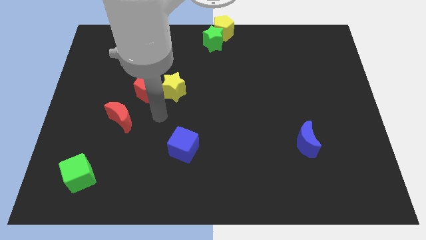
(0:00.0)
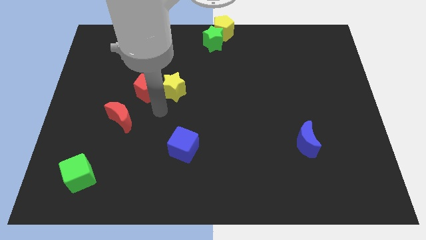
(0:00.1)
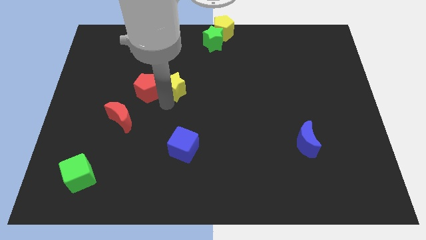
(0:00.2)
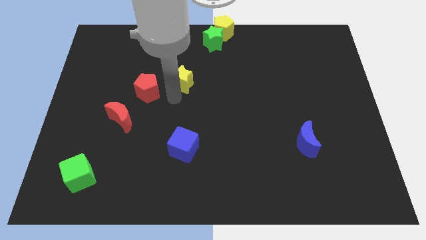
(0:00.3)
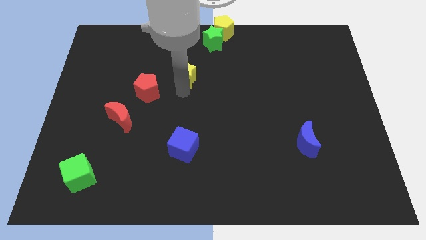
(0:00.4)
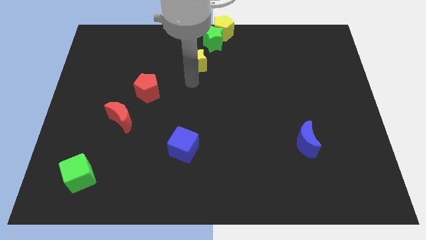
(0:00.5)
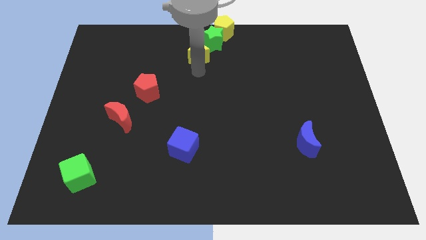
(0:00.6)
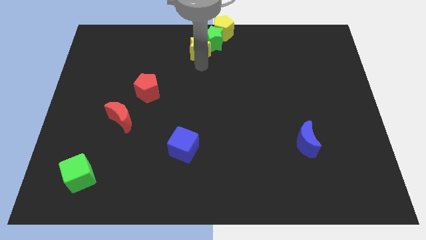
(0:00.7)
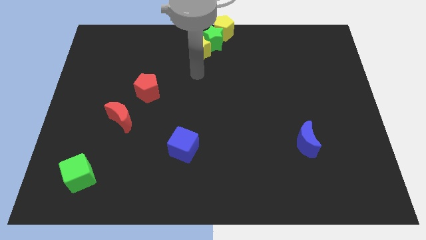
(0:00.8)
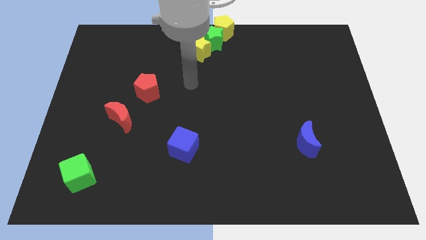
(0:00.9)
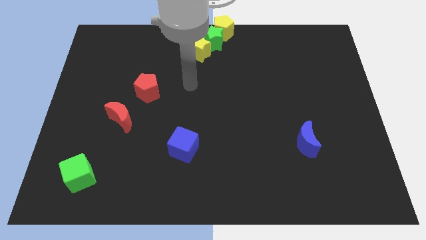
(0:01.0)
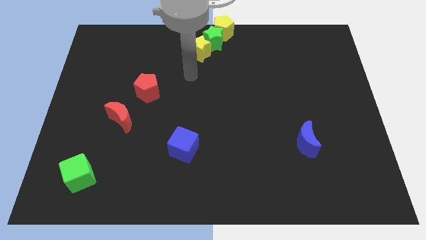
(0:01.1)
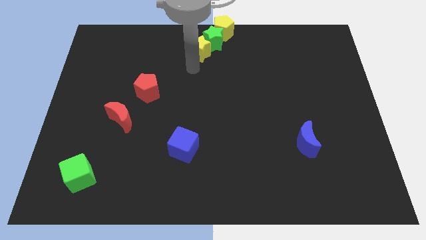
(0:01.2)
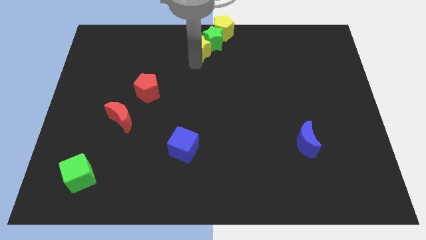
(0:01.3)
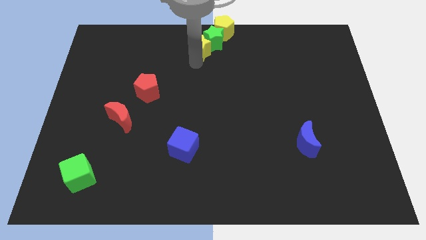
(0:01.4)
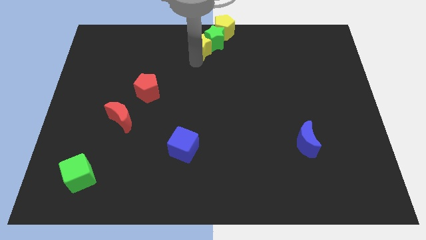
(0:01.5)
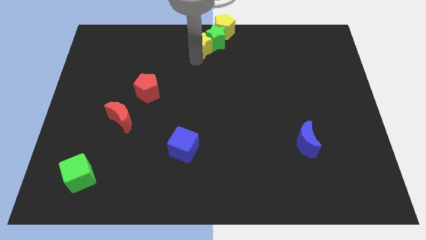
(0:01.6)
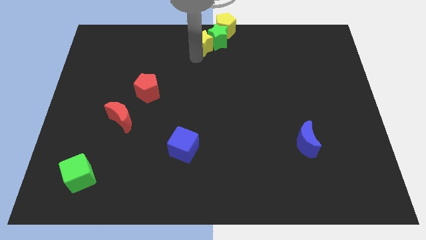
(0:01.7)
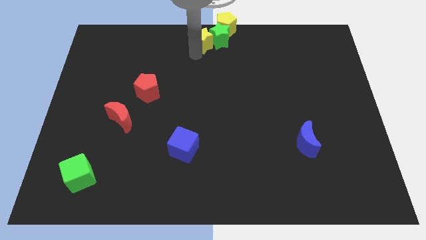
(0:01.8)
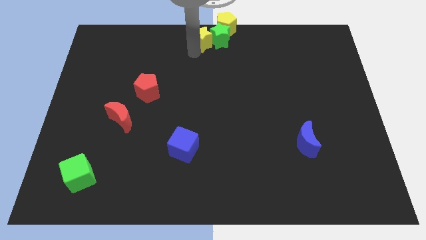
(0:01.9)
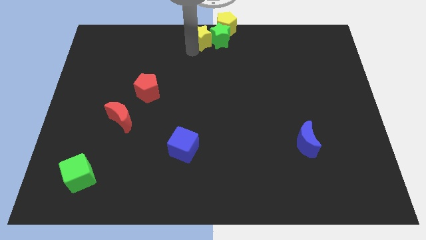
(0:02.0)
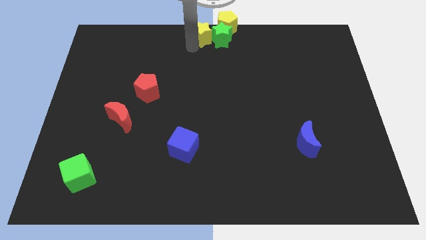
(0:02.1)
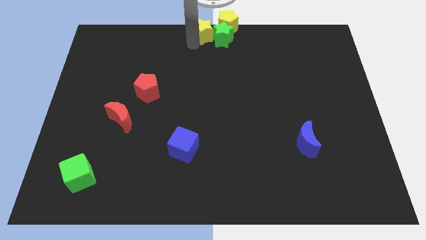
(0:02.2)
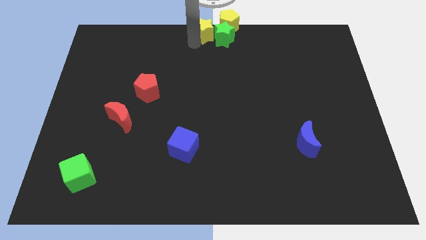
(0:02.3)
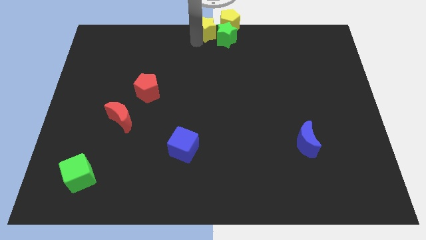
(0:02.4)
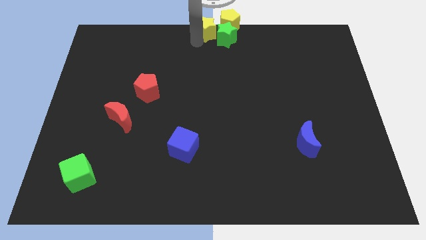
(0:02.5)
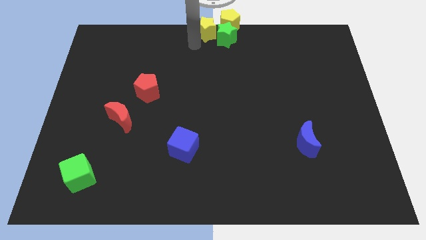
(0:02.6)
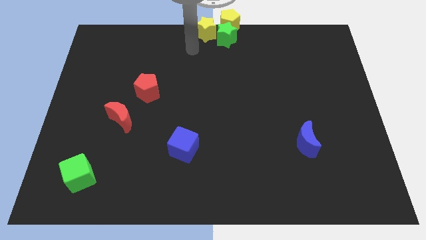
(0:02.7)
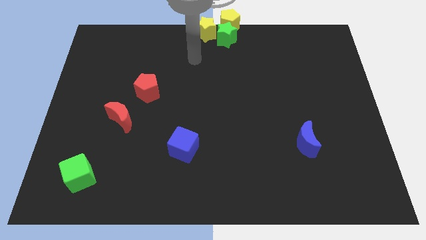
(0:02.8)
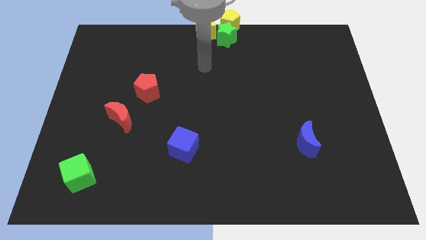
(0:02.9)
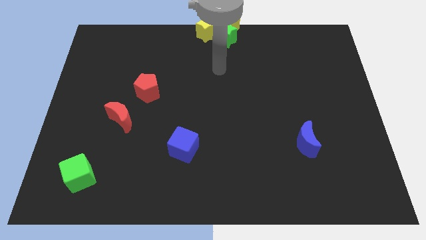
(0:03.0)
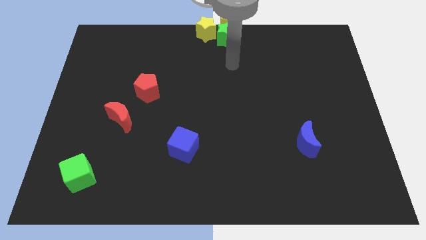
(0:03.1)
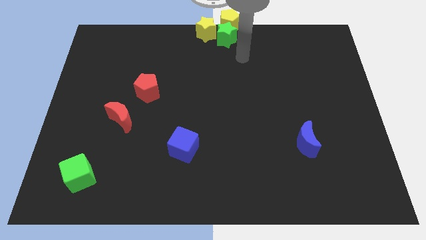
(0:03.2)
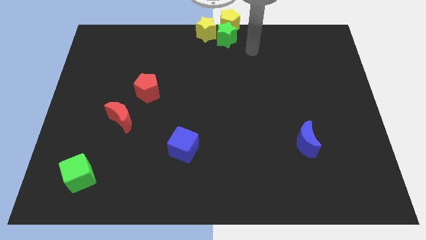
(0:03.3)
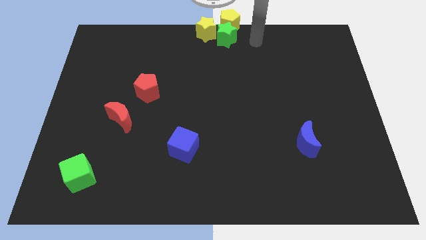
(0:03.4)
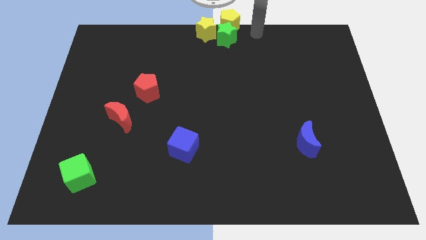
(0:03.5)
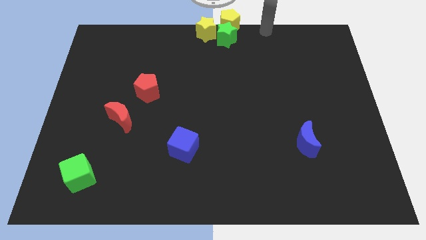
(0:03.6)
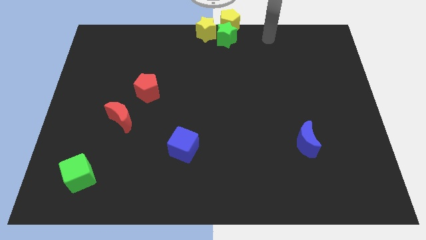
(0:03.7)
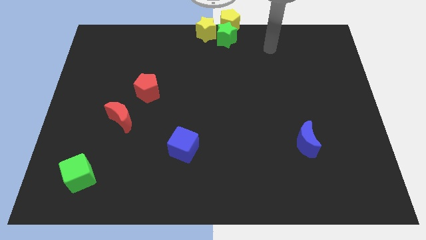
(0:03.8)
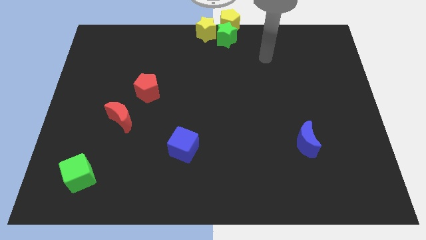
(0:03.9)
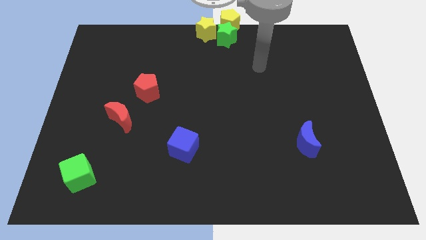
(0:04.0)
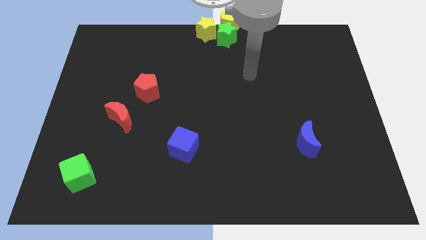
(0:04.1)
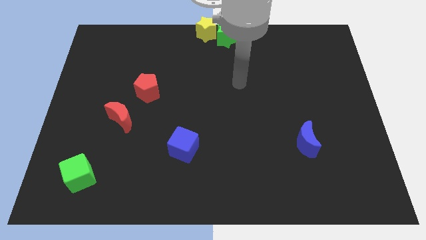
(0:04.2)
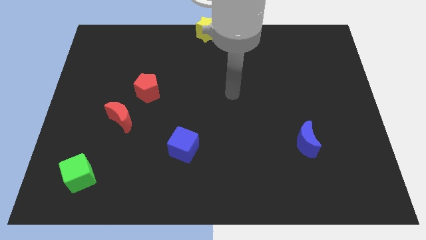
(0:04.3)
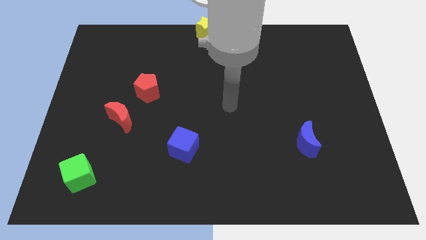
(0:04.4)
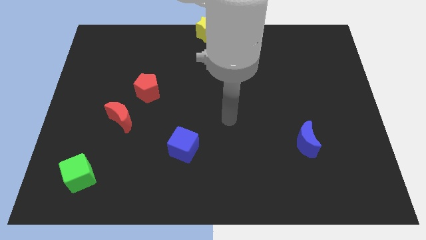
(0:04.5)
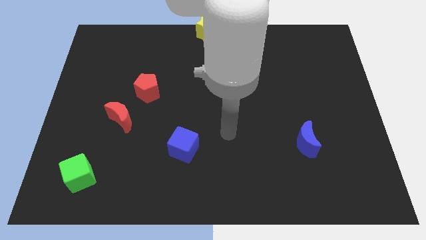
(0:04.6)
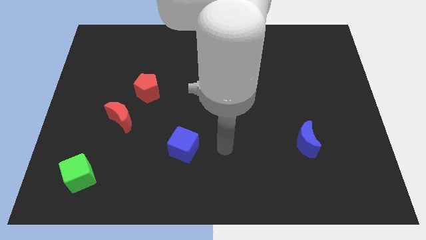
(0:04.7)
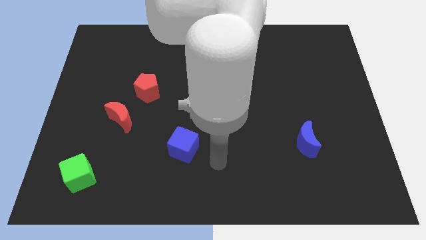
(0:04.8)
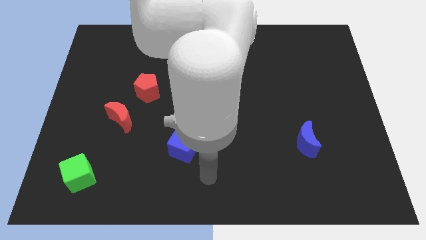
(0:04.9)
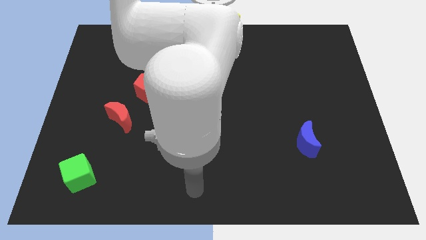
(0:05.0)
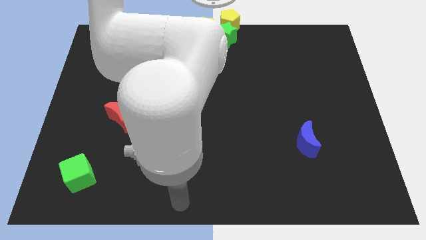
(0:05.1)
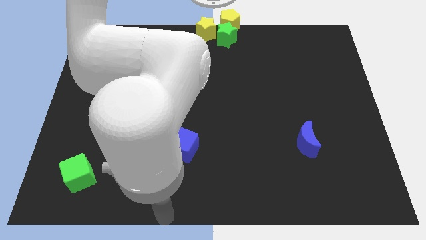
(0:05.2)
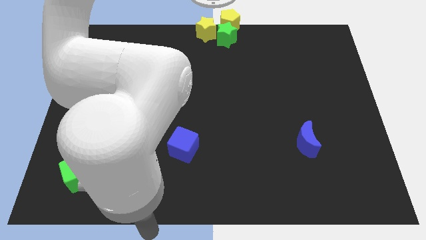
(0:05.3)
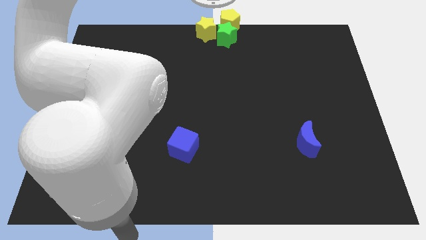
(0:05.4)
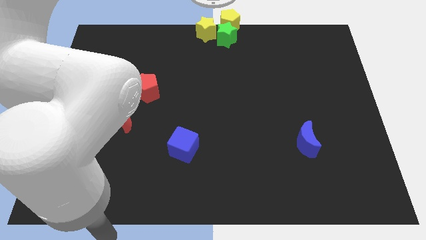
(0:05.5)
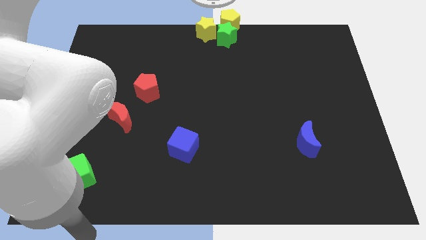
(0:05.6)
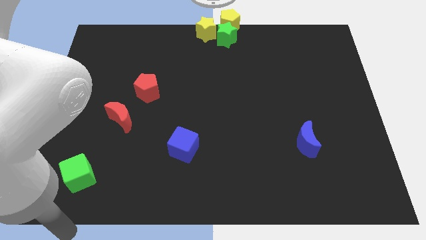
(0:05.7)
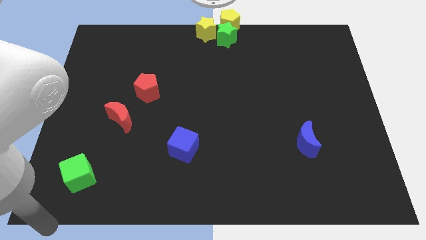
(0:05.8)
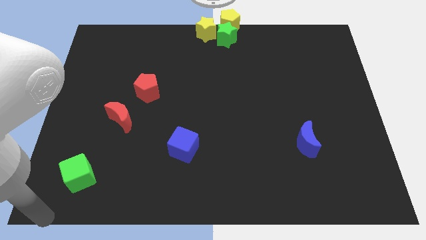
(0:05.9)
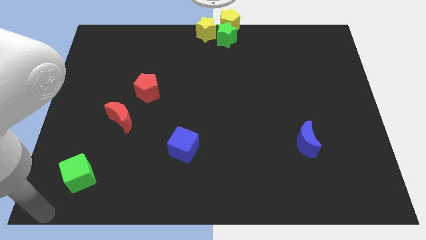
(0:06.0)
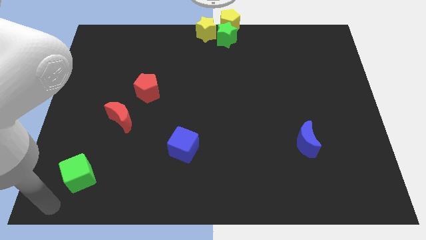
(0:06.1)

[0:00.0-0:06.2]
move your arm towards the left side of the green cube

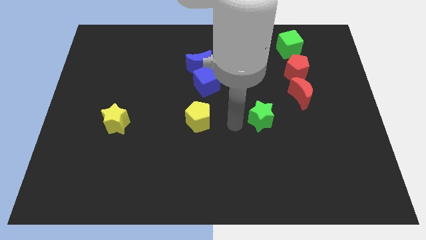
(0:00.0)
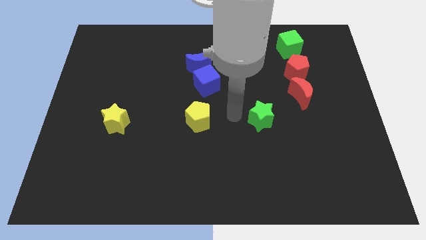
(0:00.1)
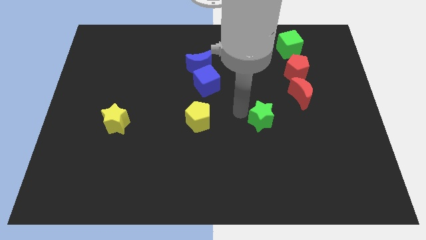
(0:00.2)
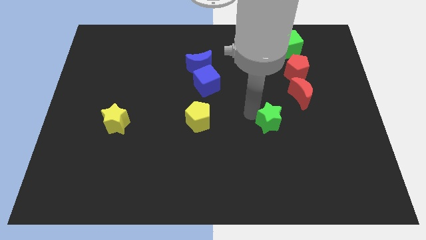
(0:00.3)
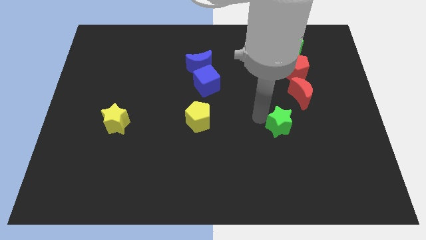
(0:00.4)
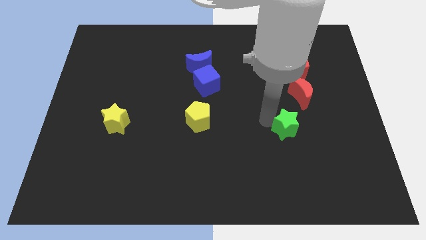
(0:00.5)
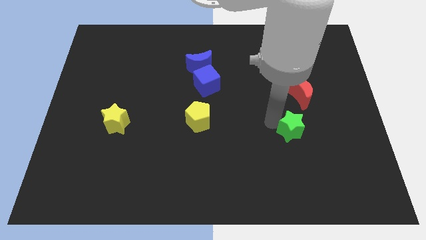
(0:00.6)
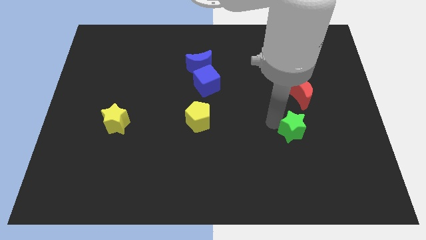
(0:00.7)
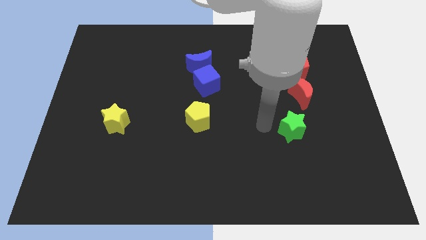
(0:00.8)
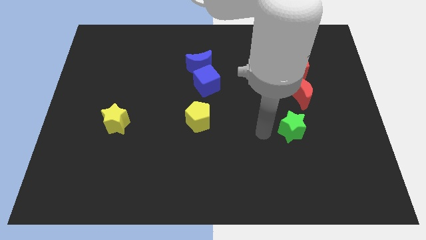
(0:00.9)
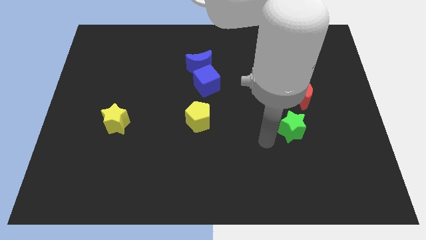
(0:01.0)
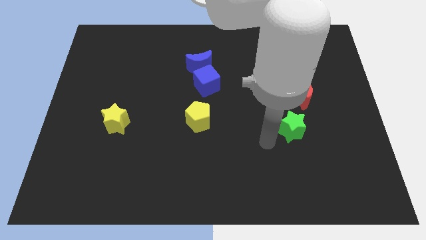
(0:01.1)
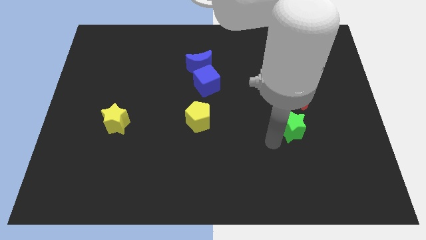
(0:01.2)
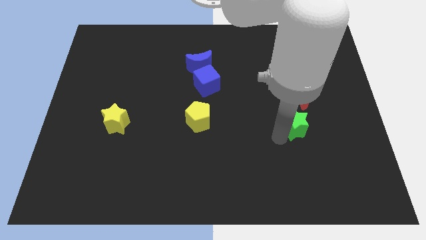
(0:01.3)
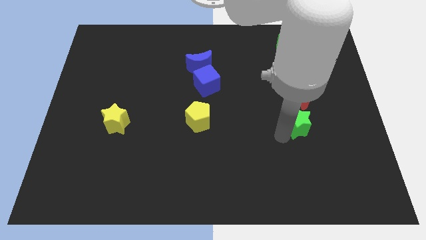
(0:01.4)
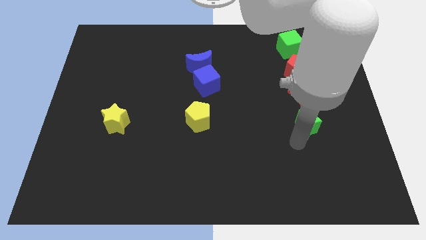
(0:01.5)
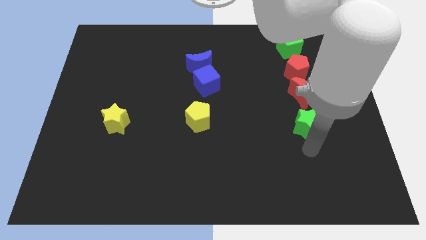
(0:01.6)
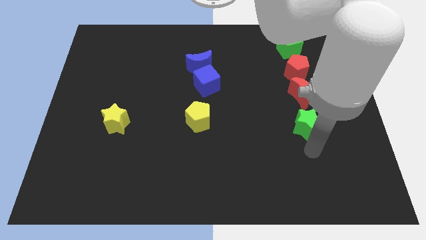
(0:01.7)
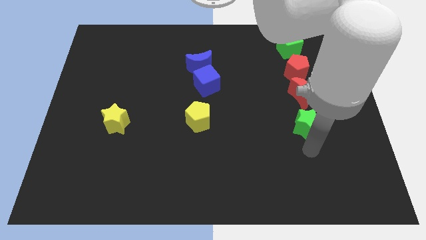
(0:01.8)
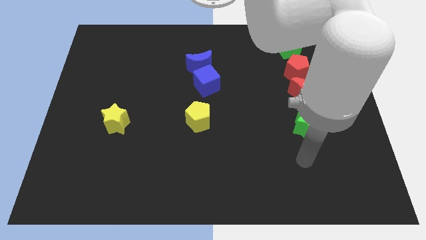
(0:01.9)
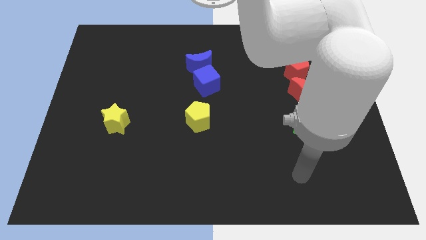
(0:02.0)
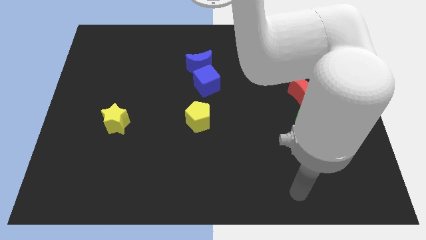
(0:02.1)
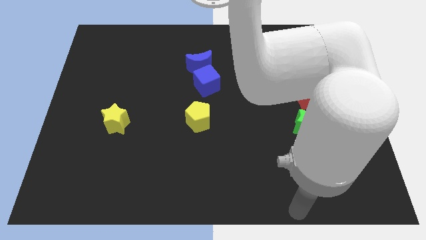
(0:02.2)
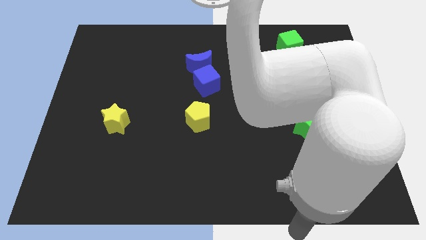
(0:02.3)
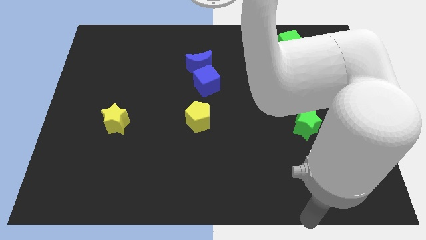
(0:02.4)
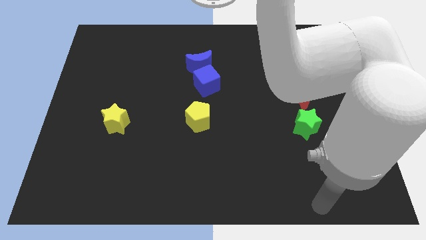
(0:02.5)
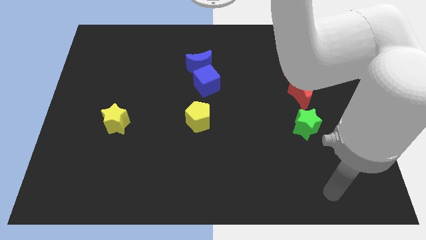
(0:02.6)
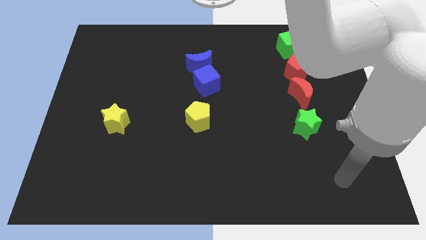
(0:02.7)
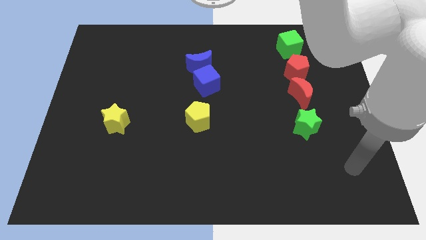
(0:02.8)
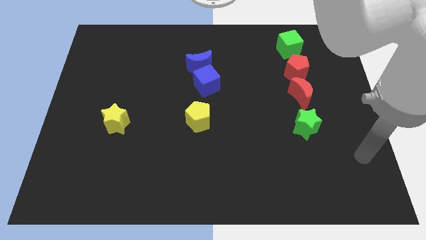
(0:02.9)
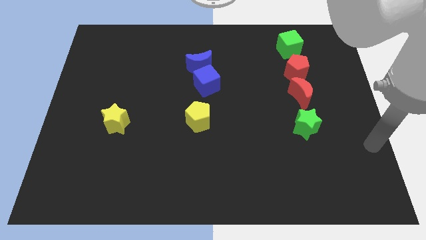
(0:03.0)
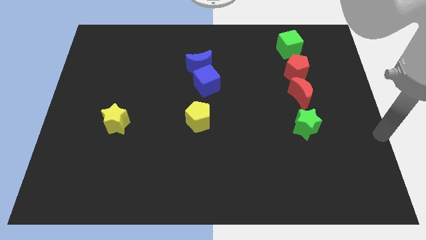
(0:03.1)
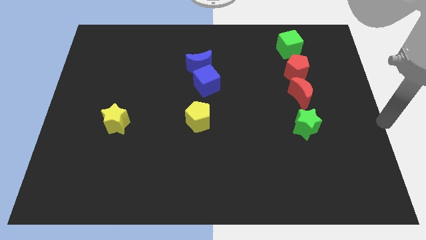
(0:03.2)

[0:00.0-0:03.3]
place the green star vertically below the red moon
